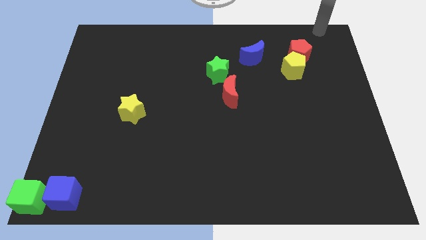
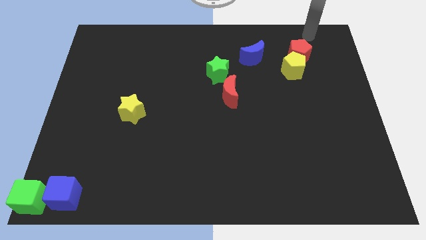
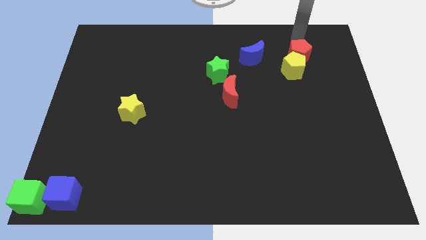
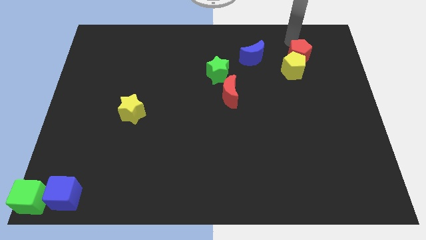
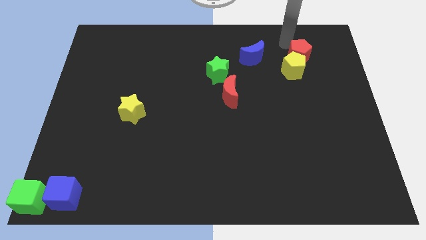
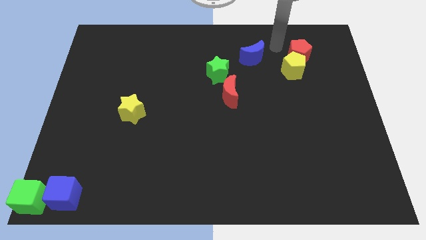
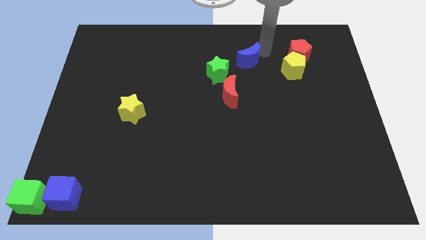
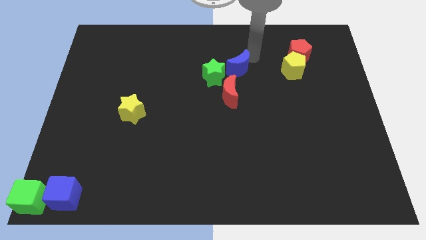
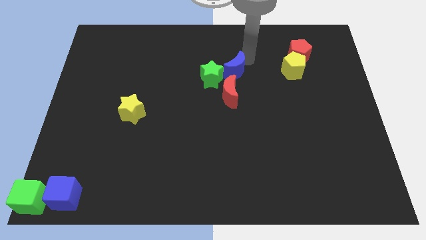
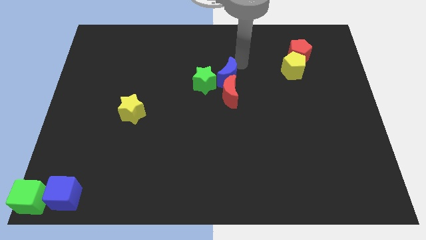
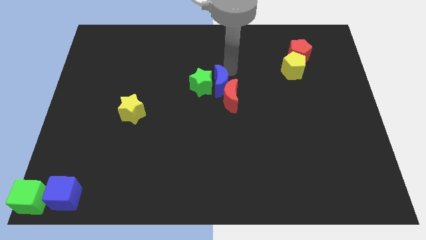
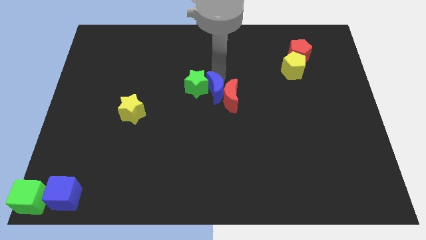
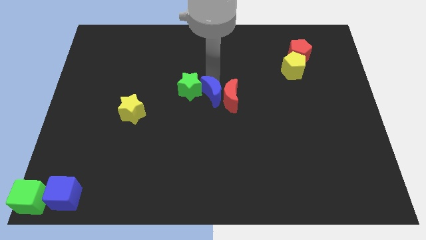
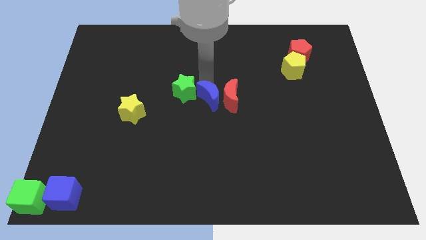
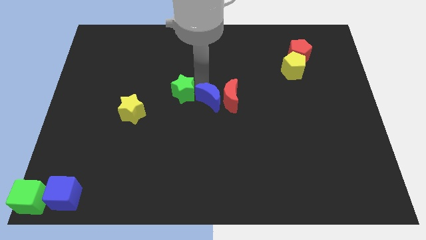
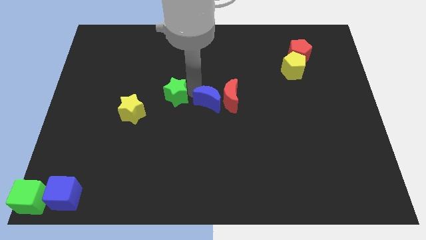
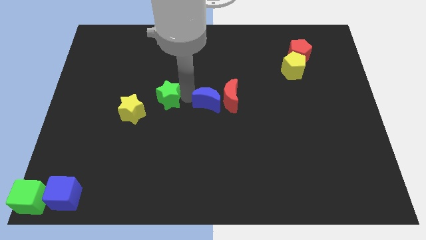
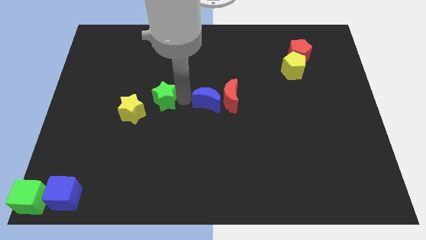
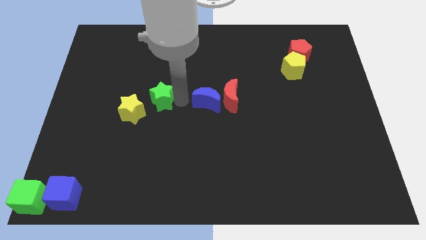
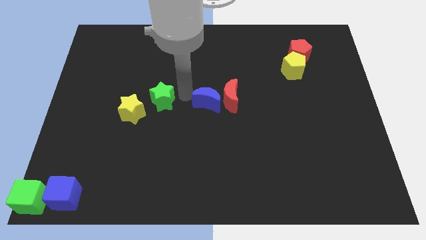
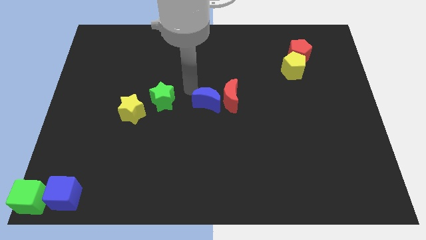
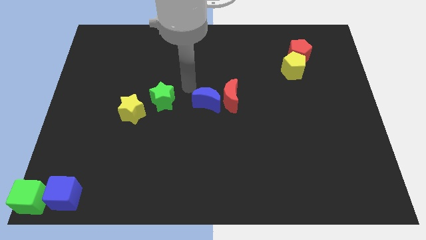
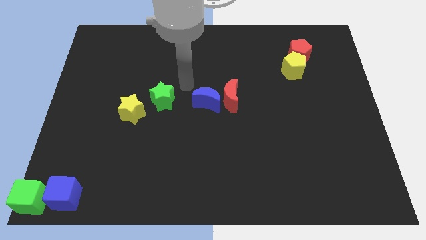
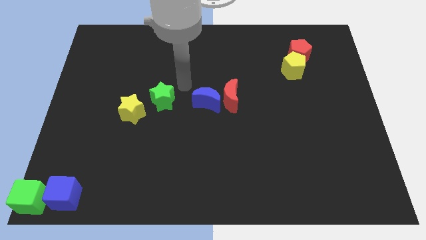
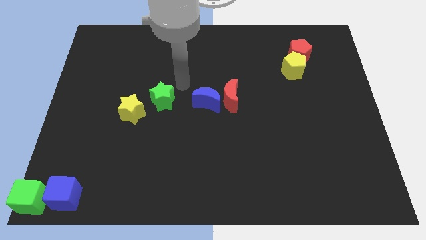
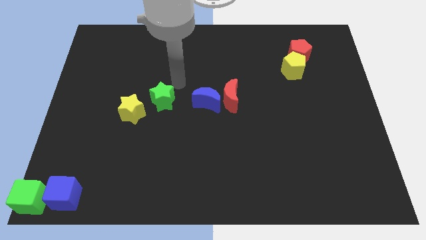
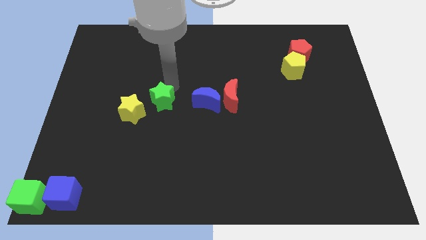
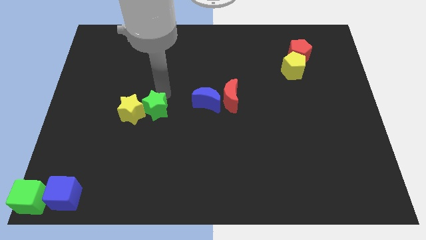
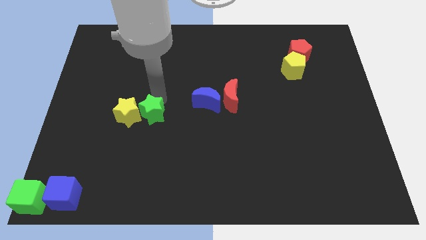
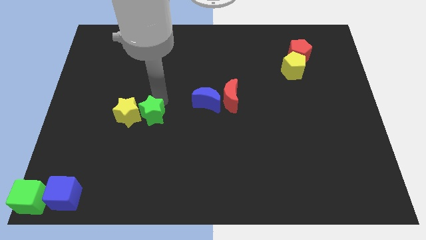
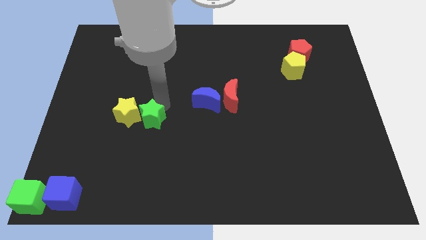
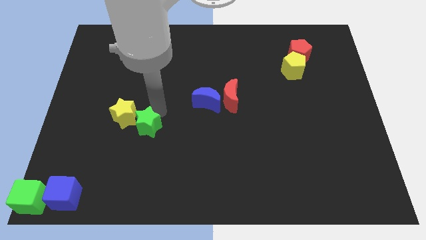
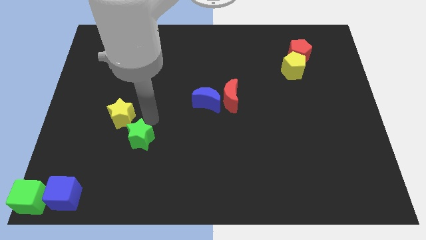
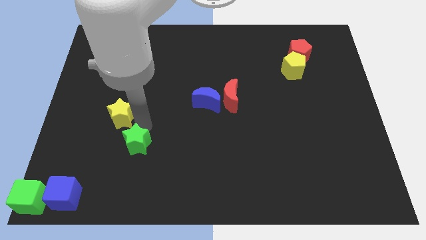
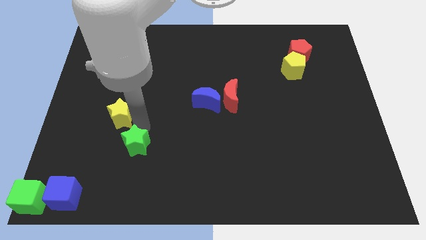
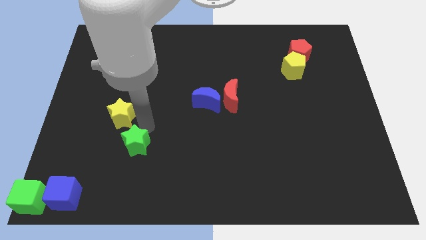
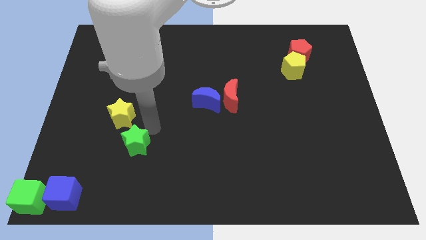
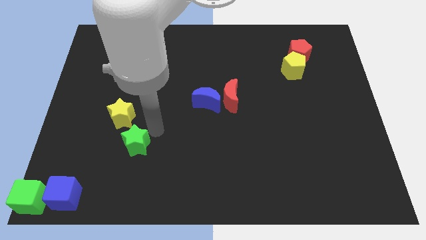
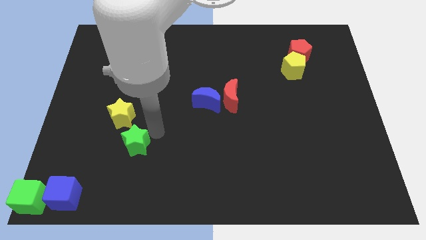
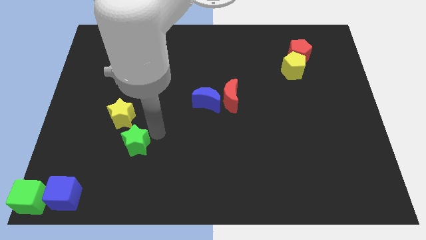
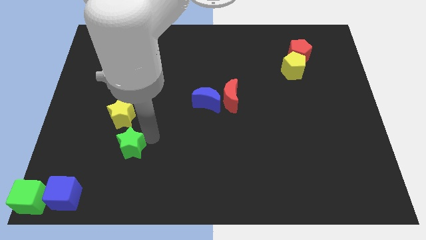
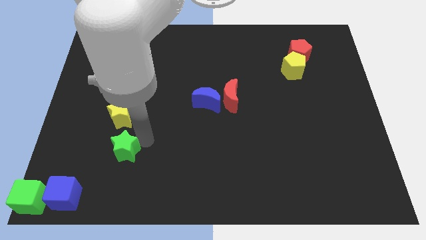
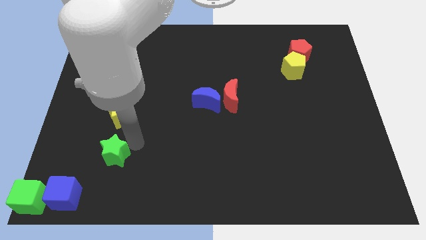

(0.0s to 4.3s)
push green star below yellow star

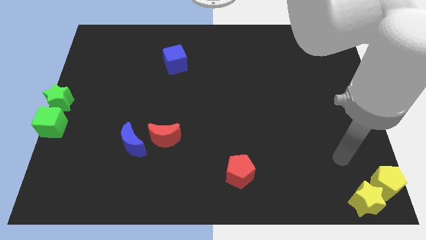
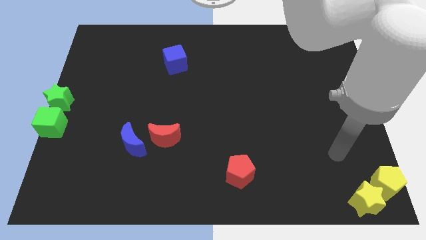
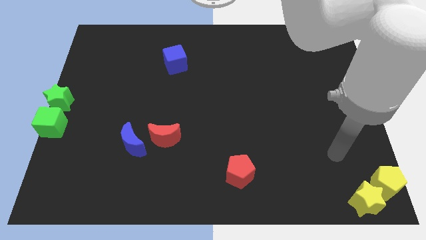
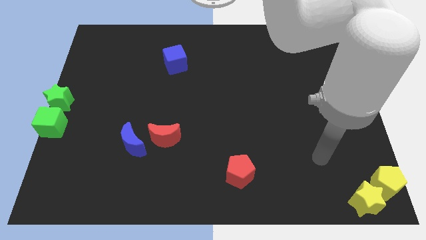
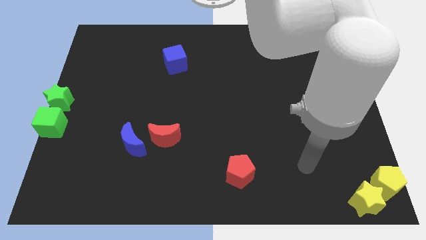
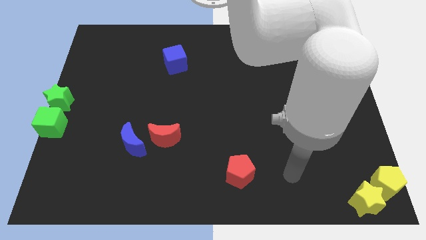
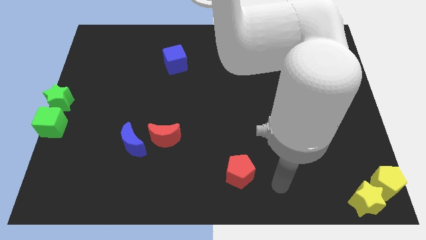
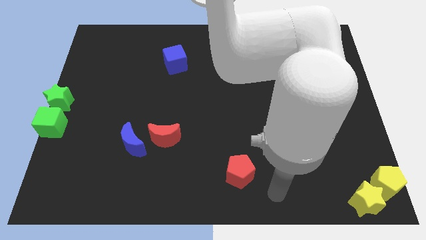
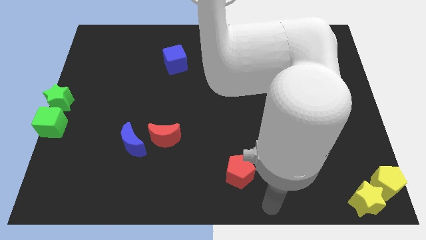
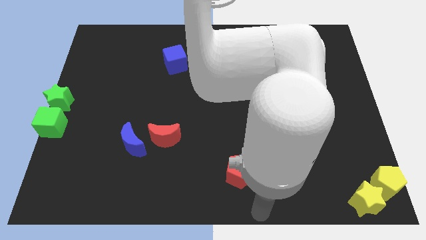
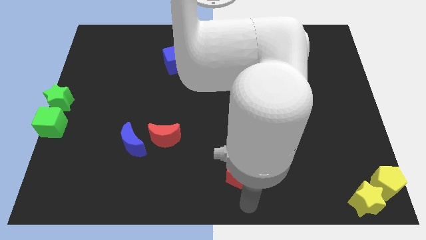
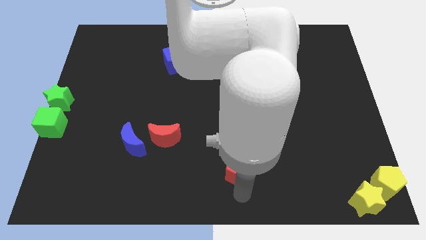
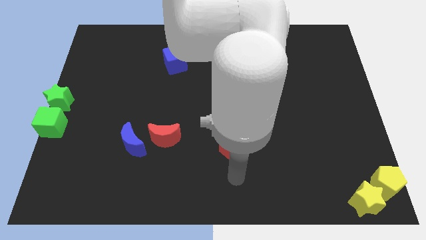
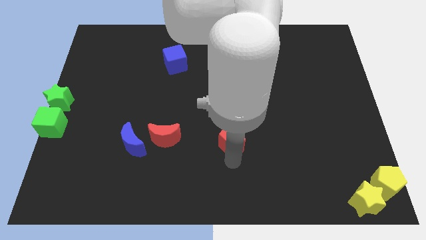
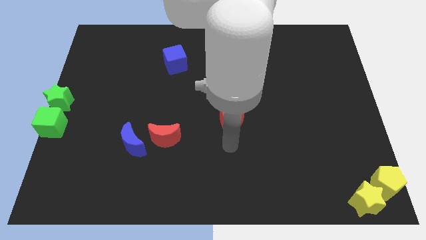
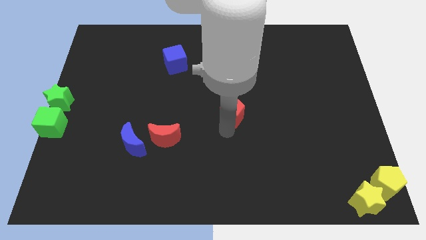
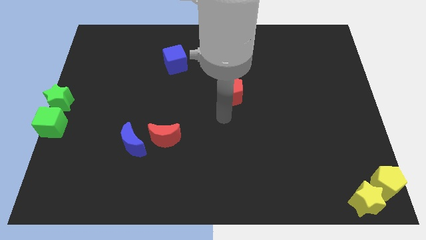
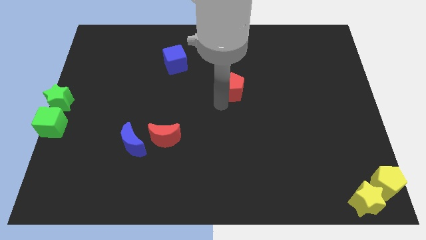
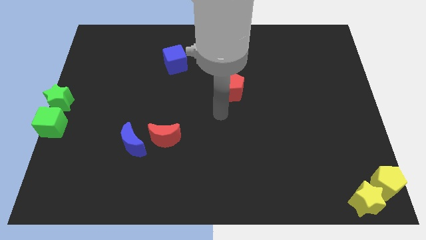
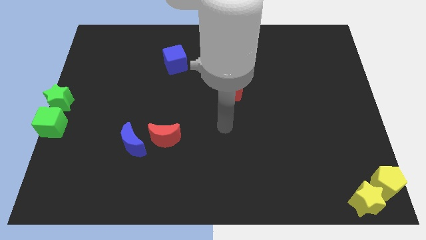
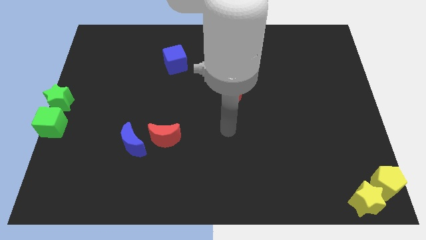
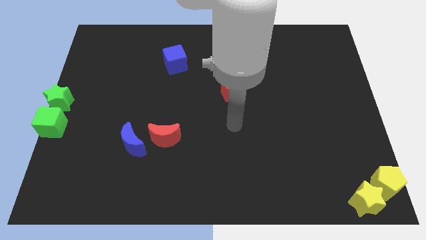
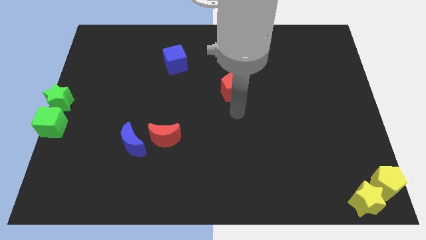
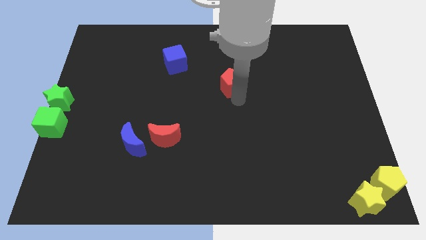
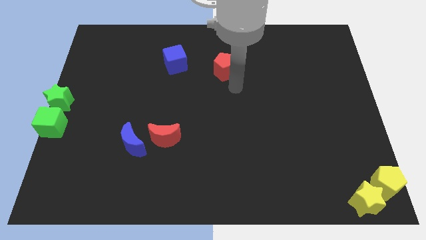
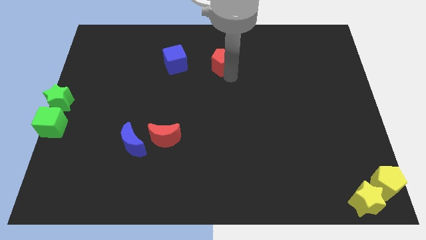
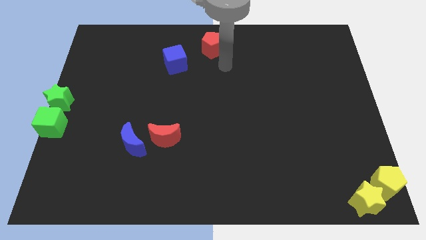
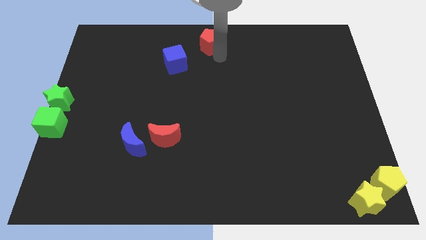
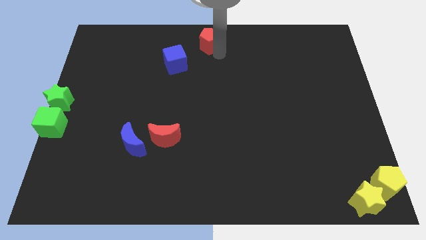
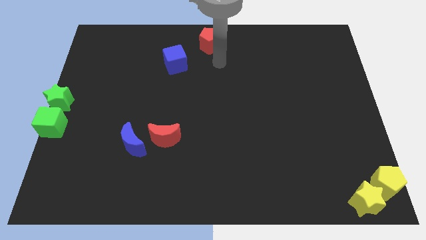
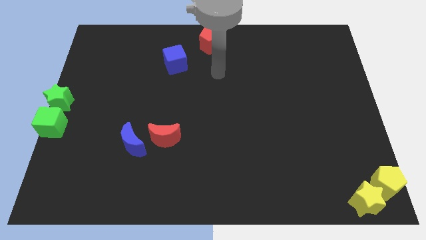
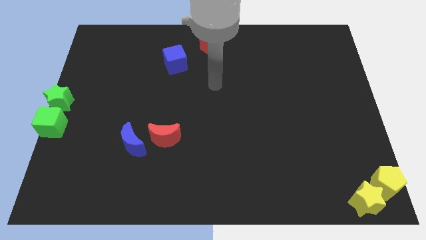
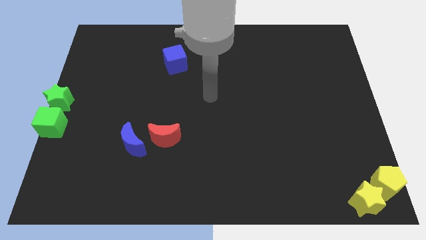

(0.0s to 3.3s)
move the red pentagon to the top center of board

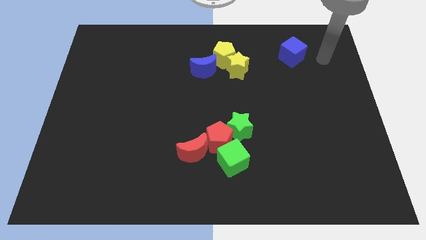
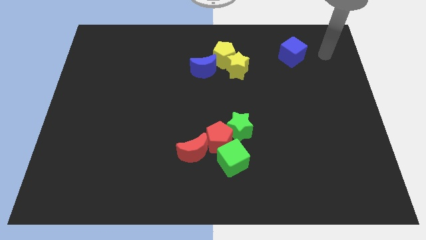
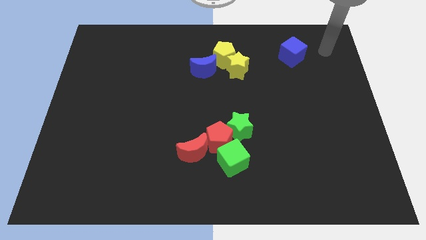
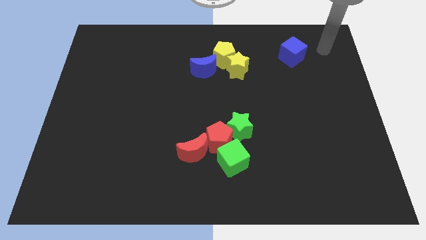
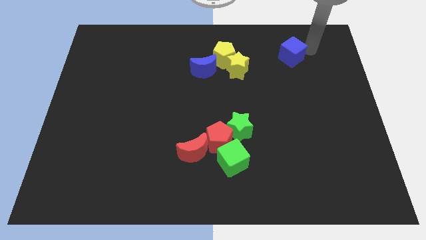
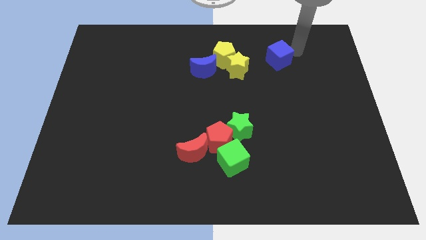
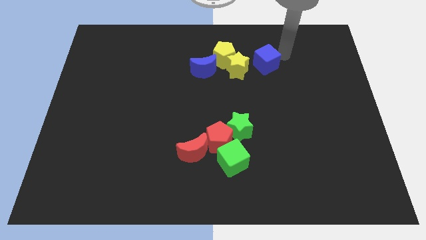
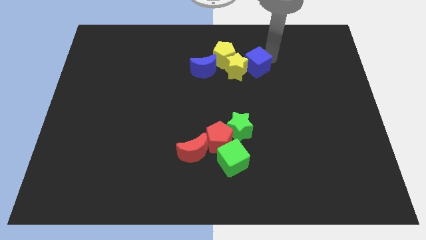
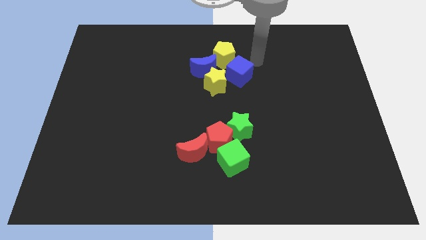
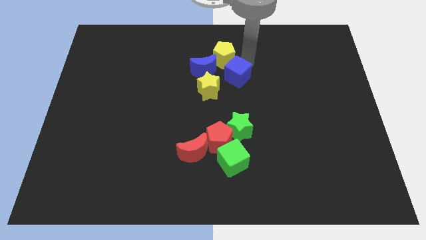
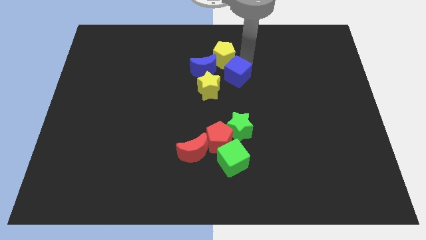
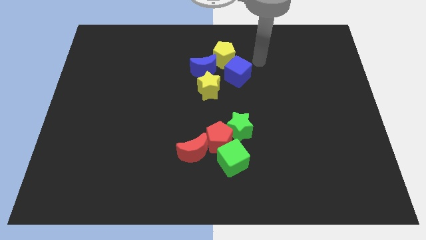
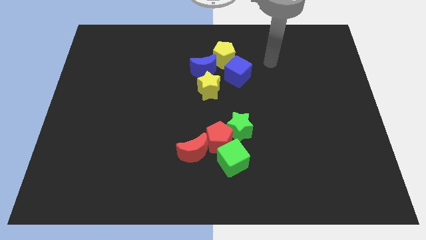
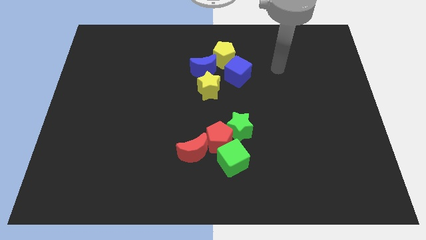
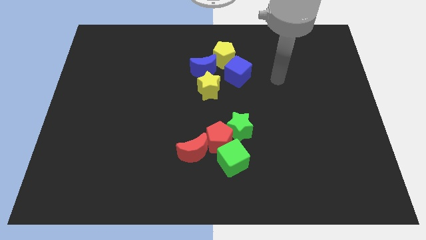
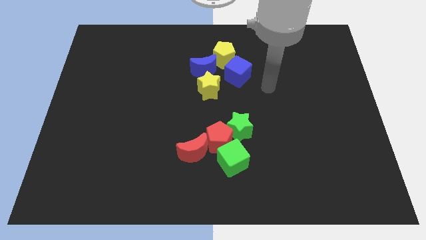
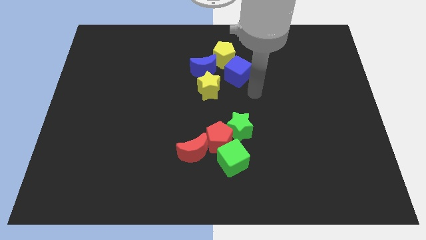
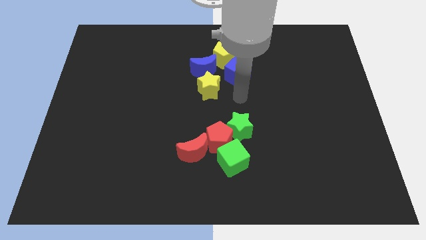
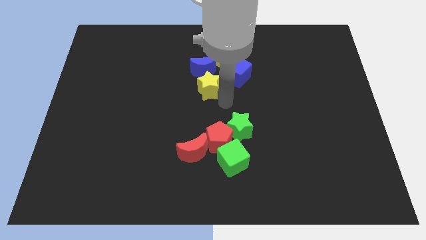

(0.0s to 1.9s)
push the blue cube towards yellow star
